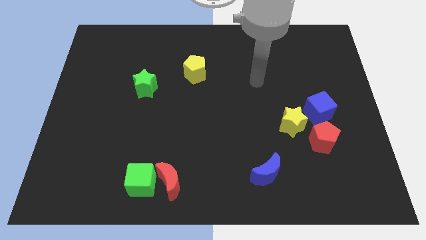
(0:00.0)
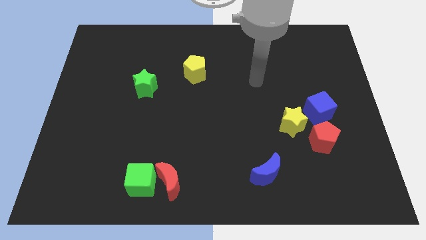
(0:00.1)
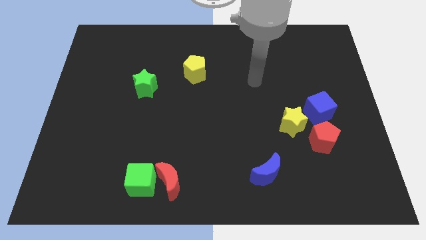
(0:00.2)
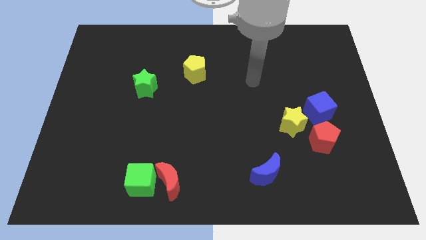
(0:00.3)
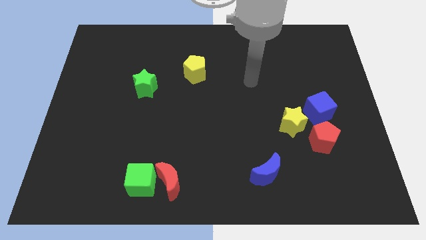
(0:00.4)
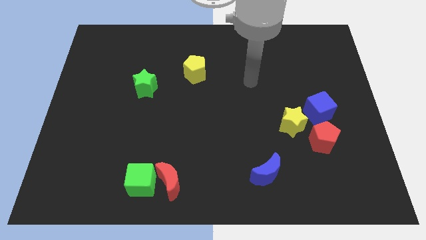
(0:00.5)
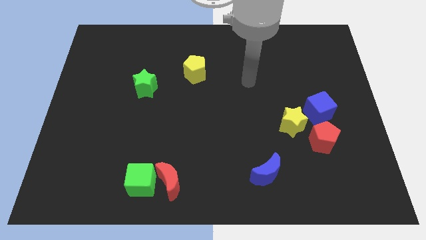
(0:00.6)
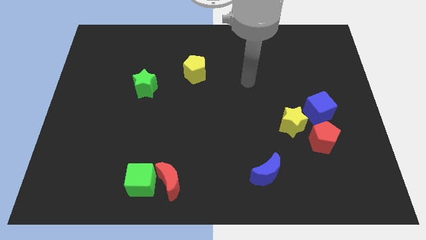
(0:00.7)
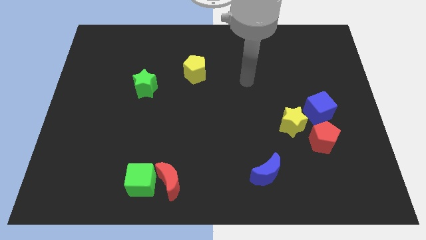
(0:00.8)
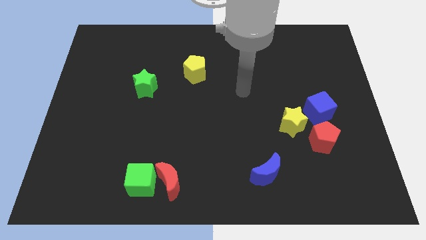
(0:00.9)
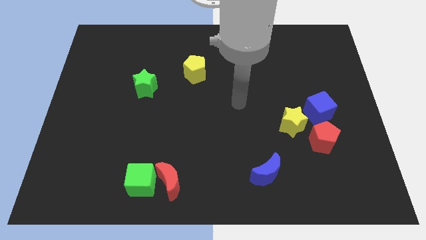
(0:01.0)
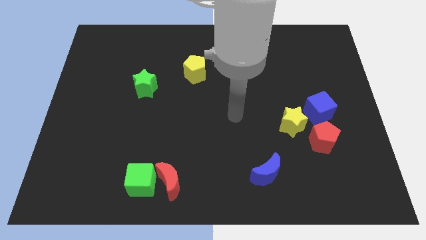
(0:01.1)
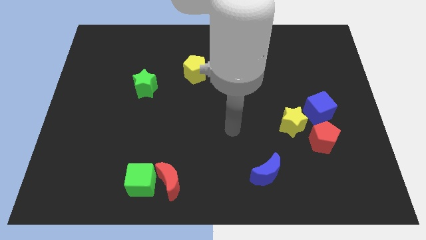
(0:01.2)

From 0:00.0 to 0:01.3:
place your hand to the left of the yellow star

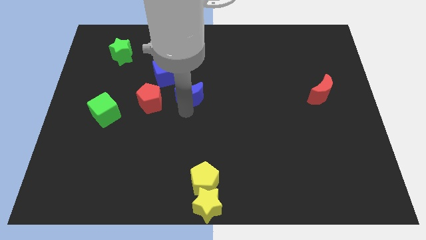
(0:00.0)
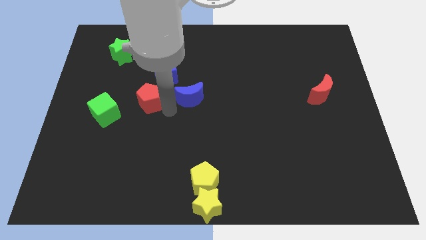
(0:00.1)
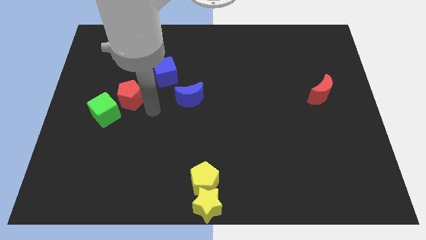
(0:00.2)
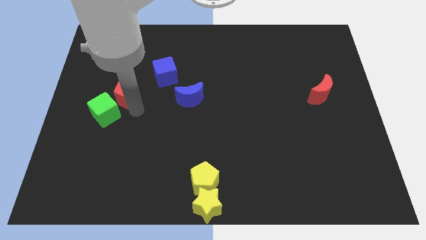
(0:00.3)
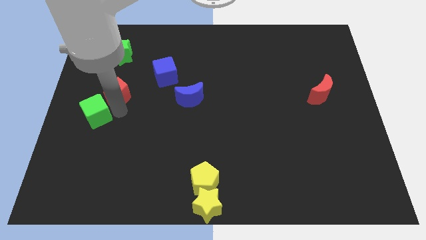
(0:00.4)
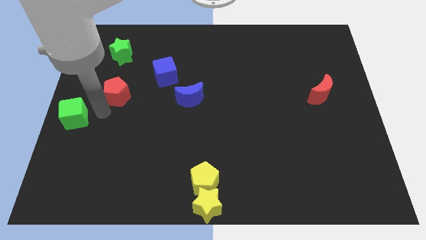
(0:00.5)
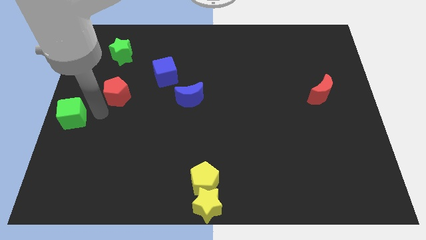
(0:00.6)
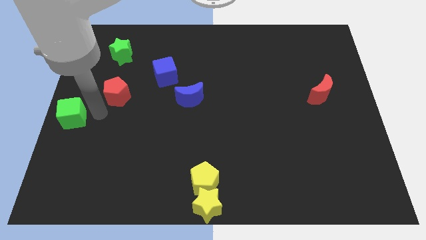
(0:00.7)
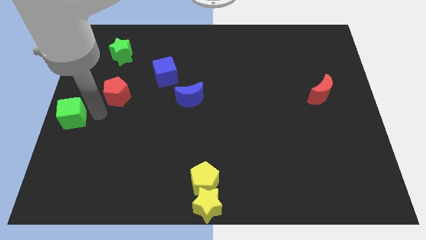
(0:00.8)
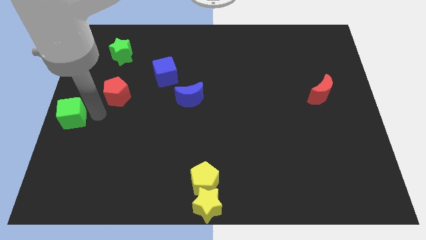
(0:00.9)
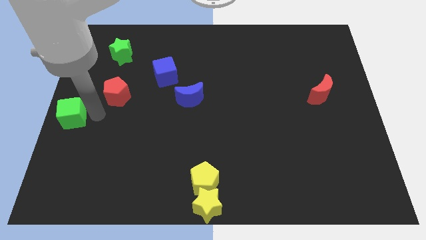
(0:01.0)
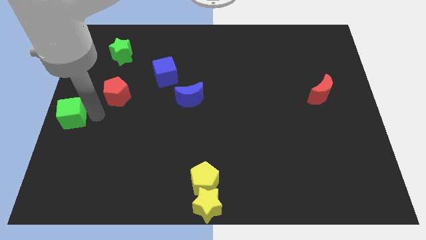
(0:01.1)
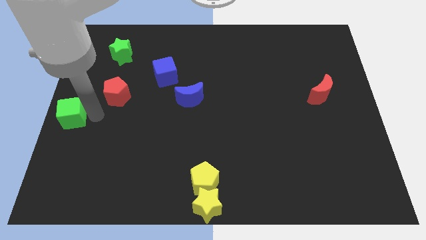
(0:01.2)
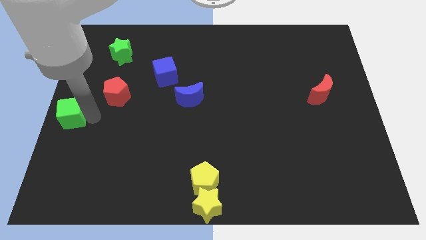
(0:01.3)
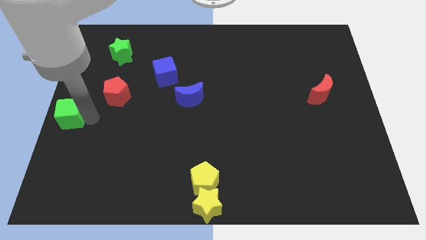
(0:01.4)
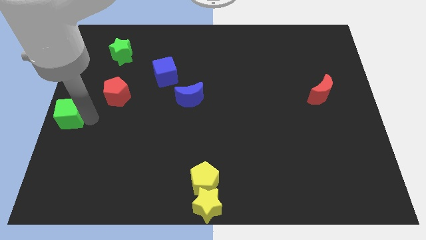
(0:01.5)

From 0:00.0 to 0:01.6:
place red pentagon to the bottom of the green star

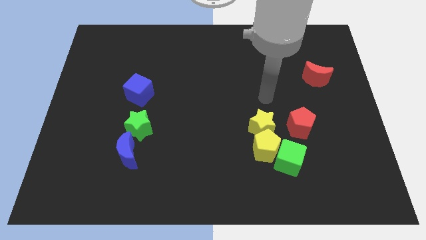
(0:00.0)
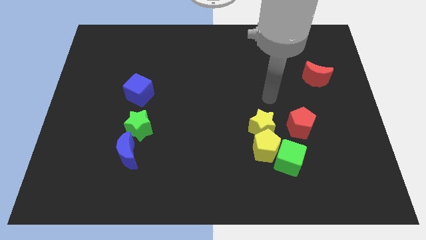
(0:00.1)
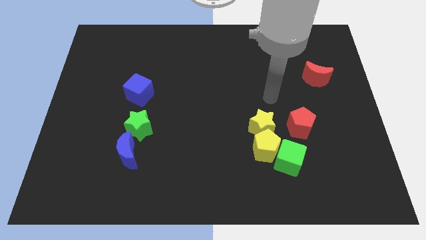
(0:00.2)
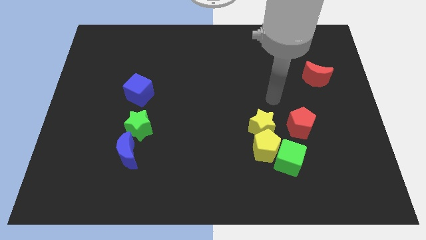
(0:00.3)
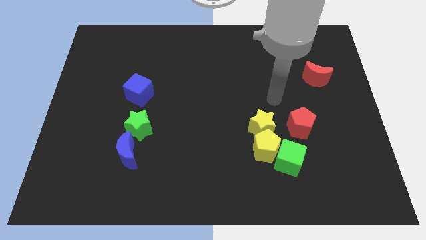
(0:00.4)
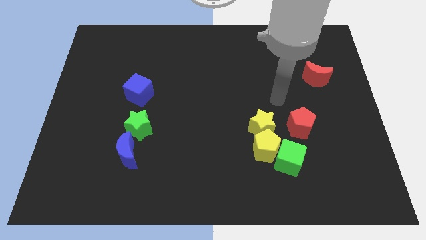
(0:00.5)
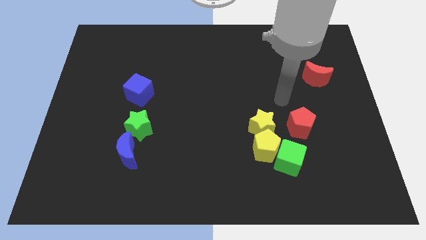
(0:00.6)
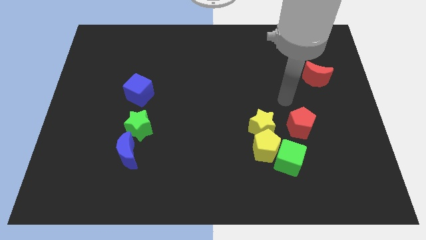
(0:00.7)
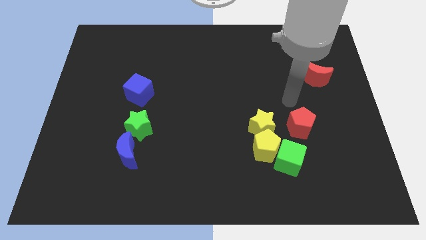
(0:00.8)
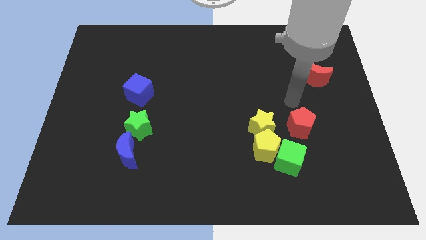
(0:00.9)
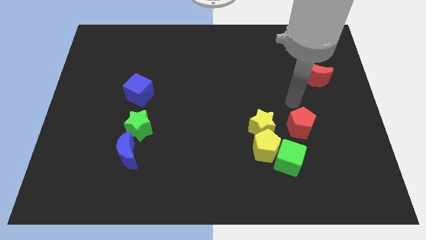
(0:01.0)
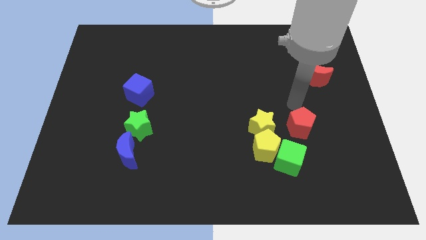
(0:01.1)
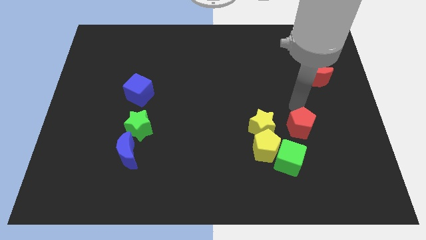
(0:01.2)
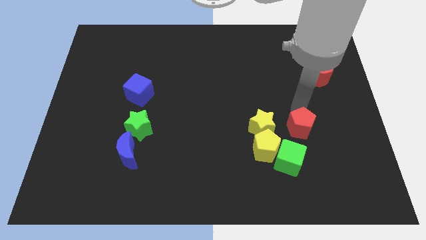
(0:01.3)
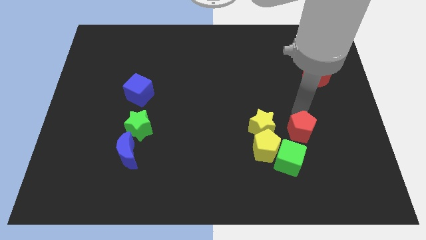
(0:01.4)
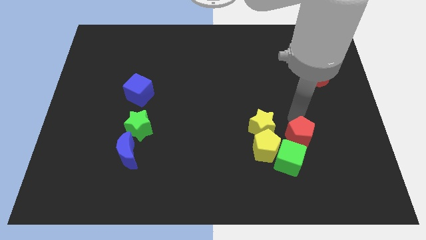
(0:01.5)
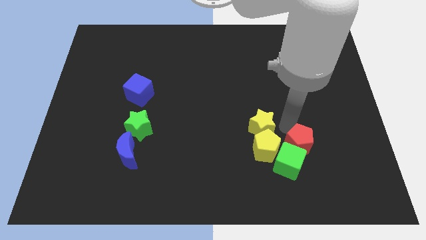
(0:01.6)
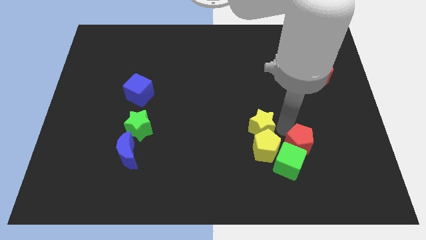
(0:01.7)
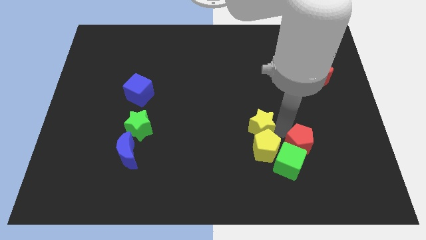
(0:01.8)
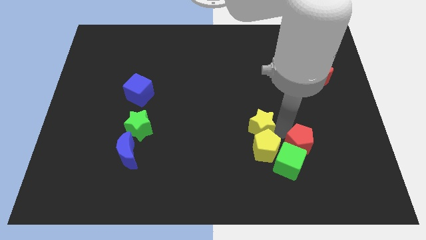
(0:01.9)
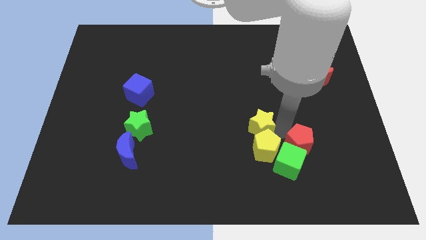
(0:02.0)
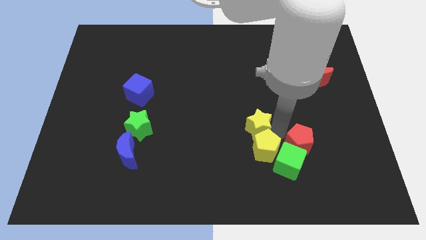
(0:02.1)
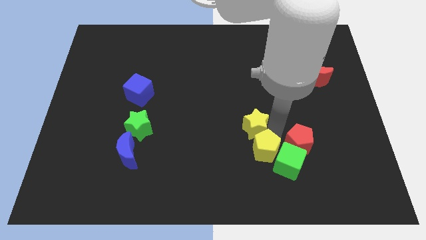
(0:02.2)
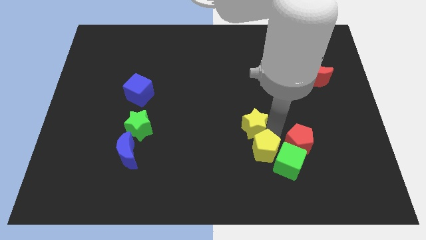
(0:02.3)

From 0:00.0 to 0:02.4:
move the red pentagon close to the green star

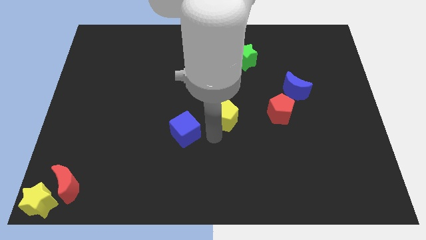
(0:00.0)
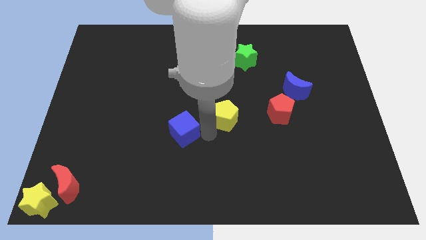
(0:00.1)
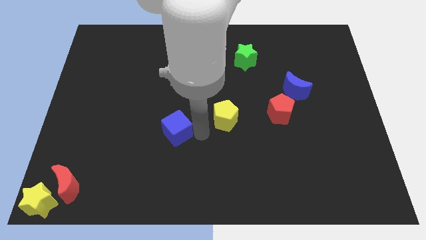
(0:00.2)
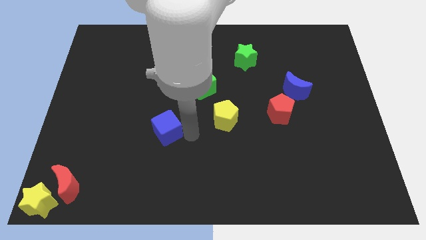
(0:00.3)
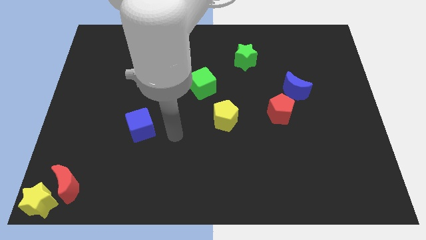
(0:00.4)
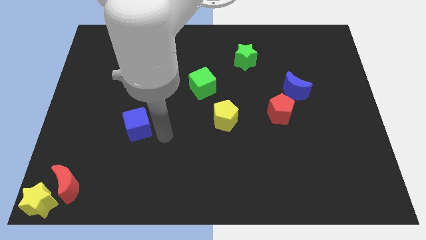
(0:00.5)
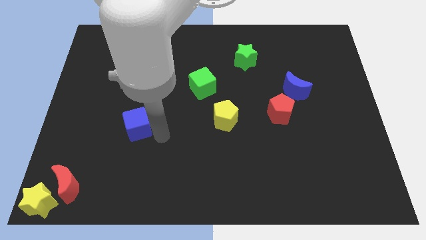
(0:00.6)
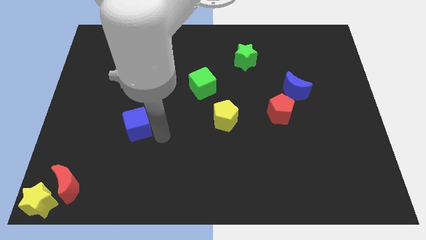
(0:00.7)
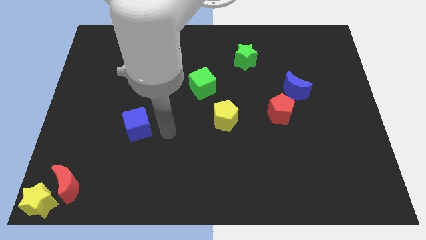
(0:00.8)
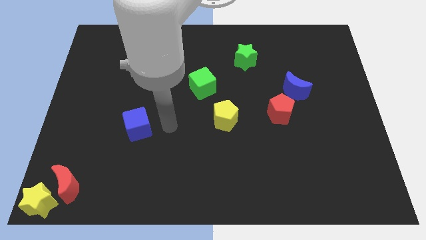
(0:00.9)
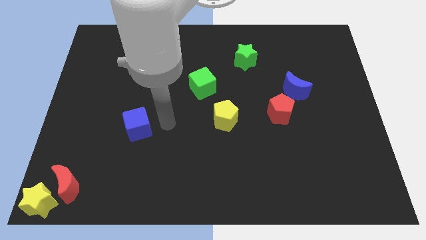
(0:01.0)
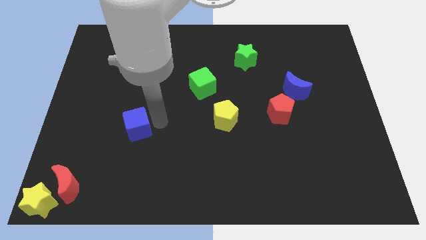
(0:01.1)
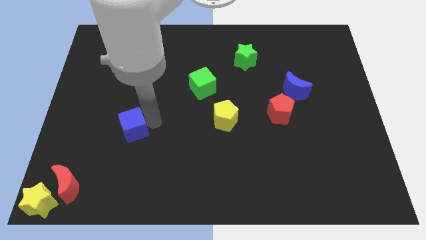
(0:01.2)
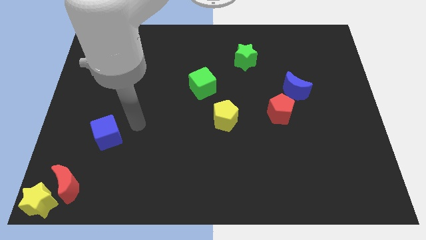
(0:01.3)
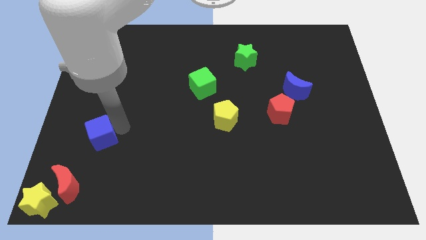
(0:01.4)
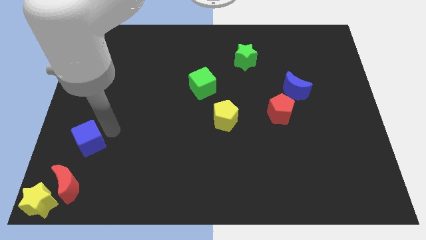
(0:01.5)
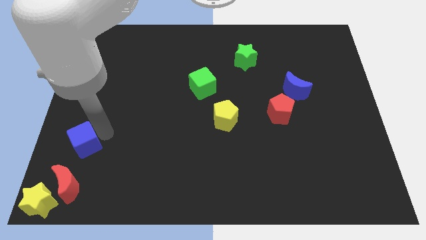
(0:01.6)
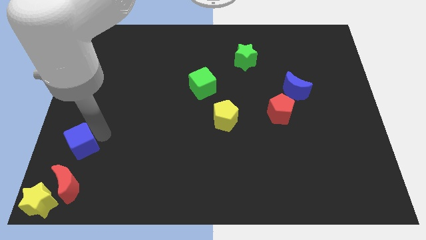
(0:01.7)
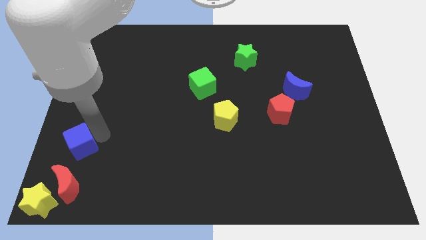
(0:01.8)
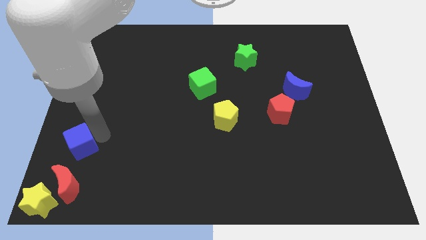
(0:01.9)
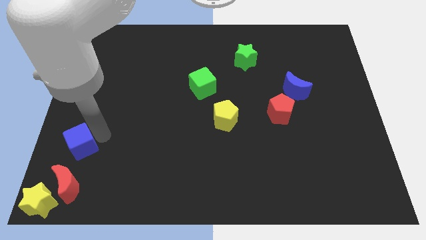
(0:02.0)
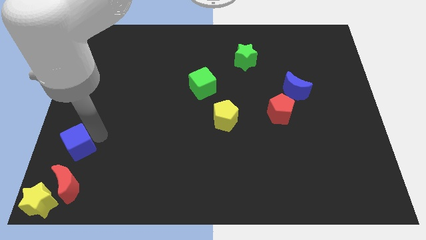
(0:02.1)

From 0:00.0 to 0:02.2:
put the blue cube above the red moon

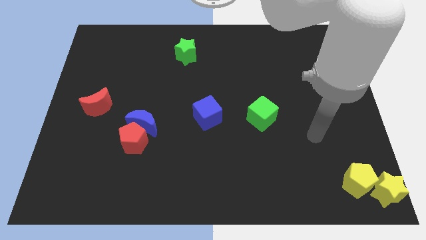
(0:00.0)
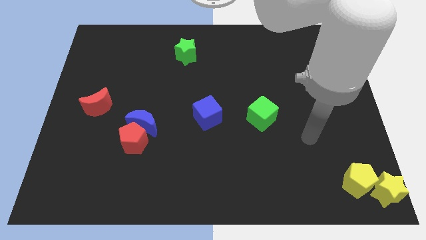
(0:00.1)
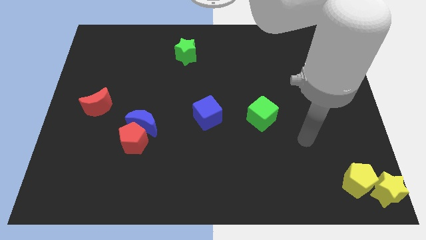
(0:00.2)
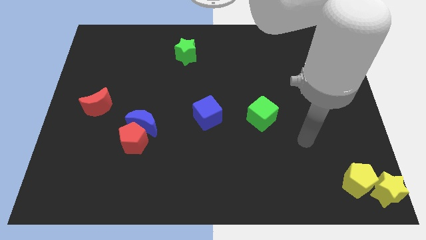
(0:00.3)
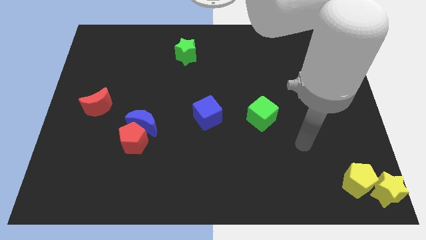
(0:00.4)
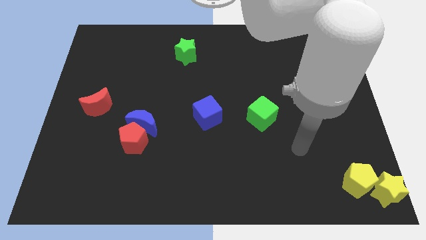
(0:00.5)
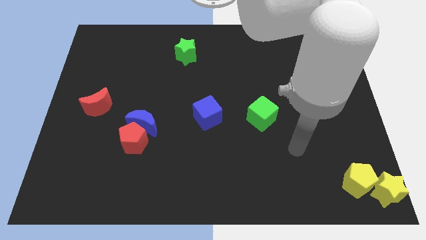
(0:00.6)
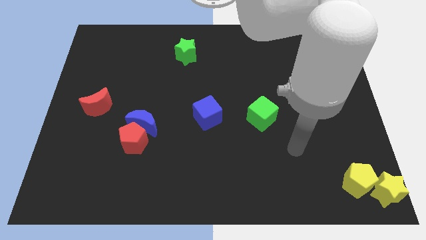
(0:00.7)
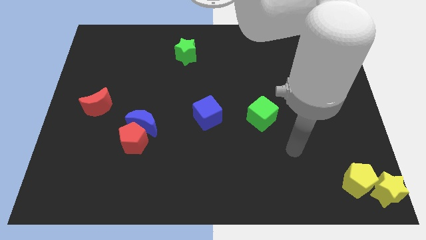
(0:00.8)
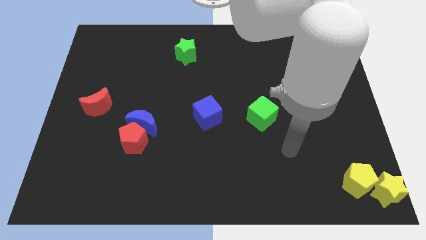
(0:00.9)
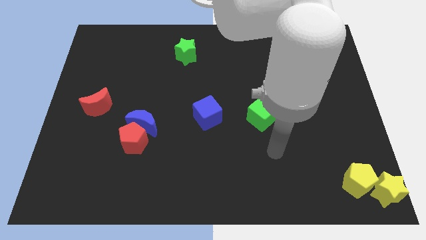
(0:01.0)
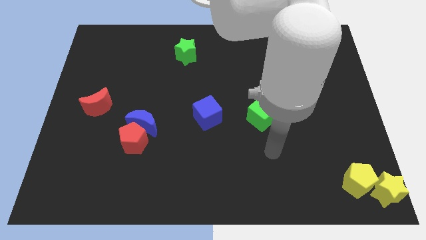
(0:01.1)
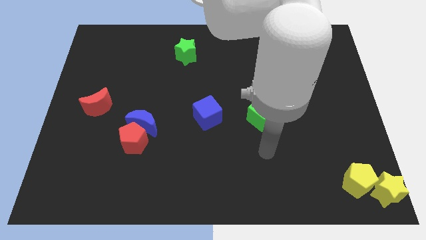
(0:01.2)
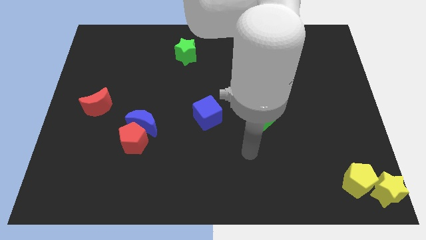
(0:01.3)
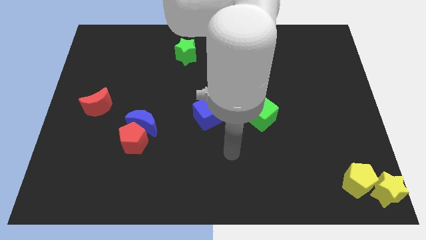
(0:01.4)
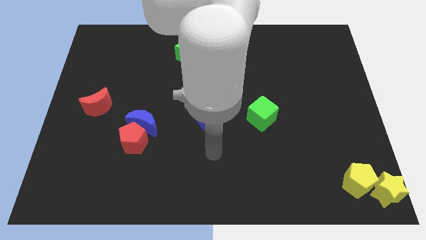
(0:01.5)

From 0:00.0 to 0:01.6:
move your arm to the bottom side of the blue cube
